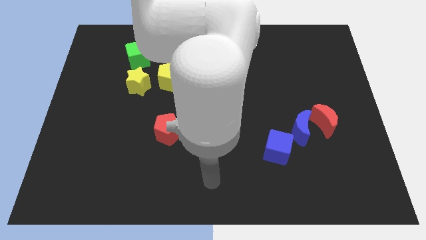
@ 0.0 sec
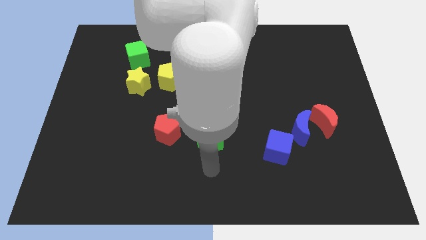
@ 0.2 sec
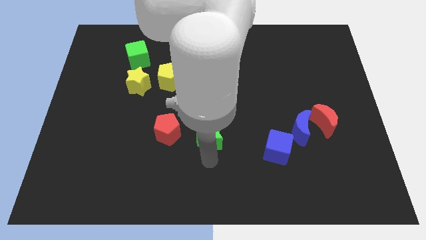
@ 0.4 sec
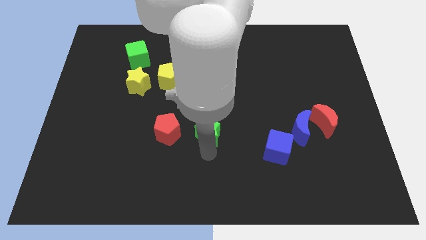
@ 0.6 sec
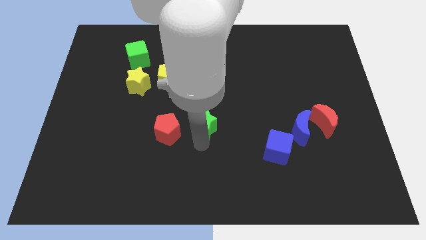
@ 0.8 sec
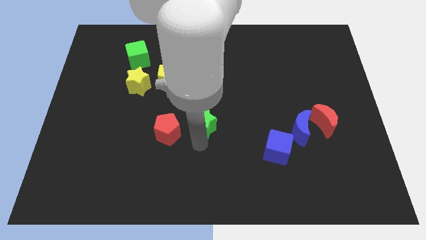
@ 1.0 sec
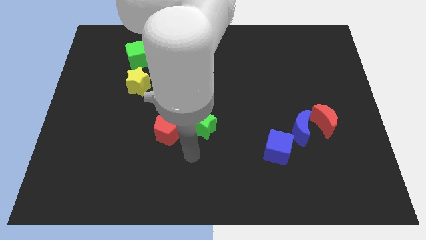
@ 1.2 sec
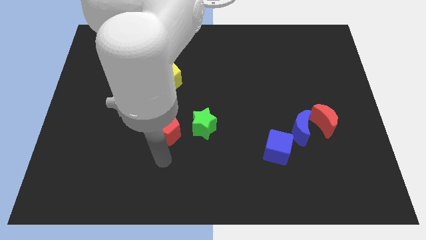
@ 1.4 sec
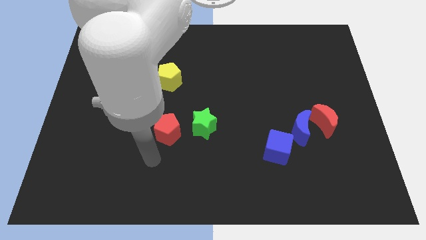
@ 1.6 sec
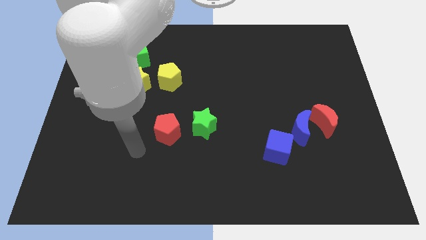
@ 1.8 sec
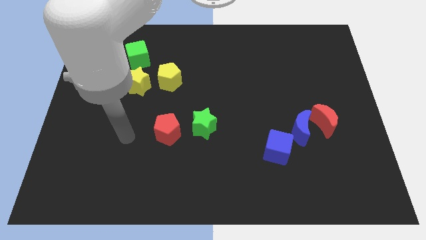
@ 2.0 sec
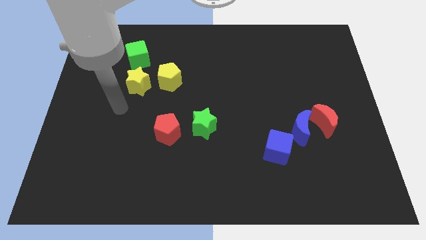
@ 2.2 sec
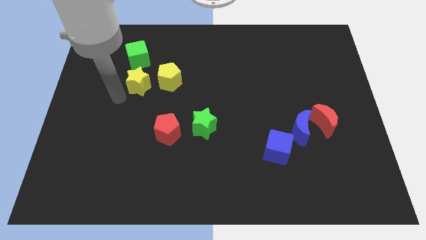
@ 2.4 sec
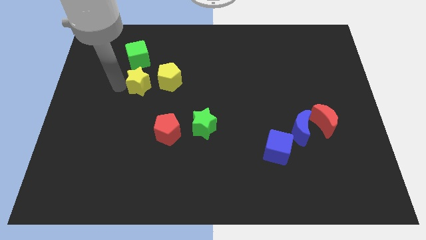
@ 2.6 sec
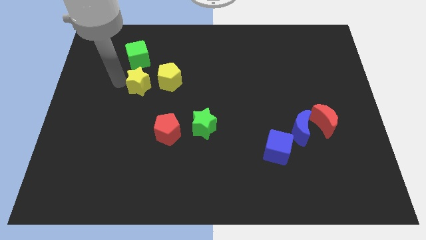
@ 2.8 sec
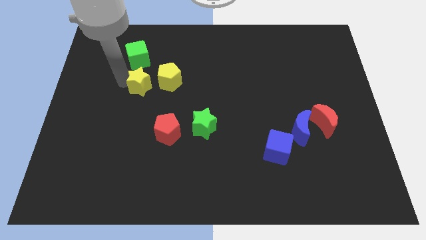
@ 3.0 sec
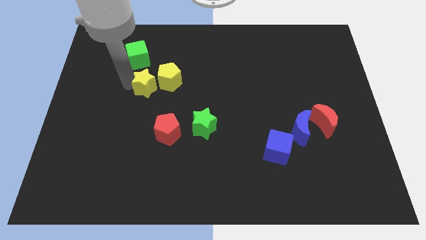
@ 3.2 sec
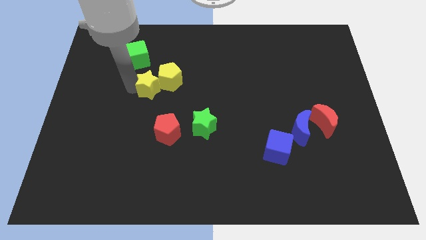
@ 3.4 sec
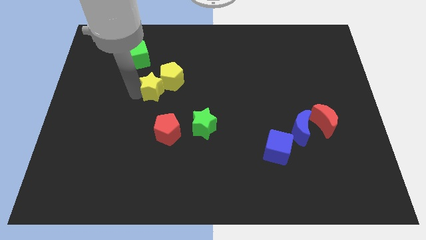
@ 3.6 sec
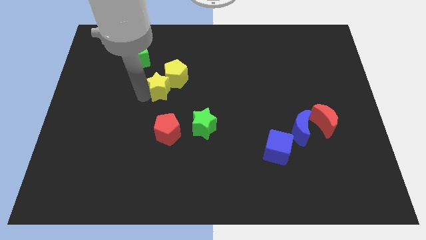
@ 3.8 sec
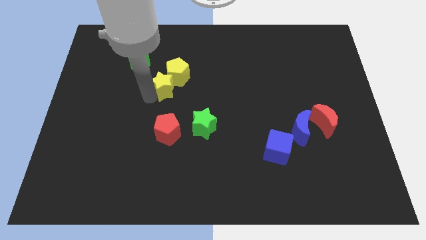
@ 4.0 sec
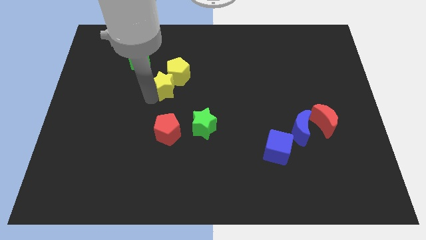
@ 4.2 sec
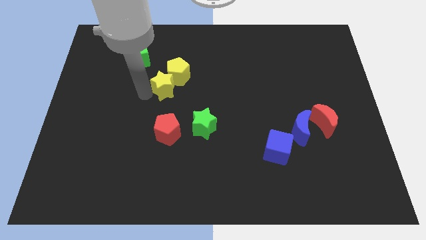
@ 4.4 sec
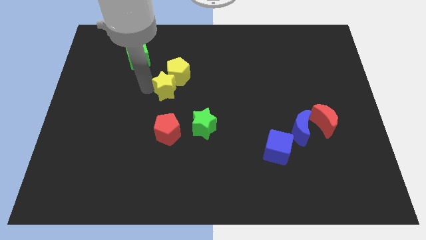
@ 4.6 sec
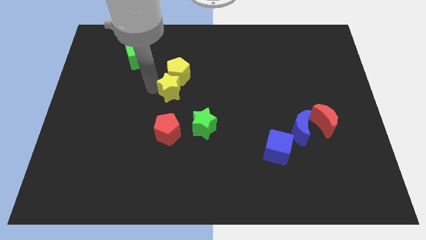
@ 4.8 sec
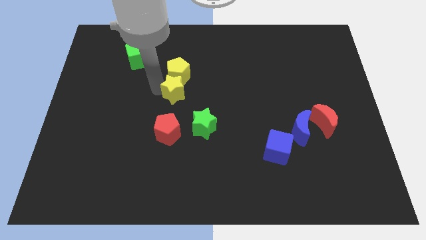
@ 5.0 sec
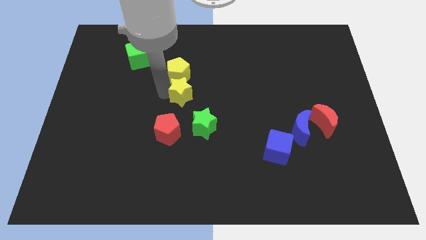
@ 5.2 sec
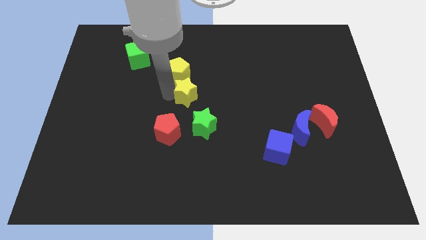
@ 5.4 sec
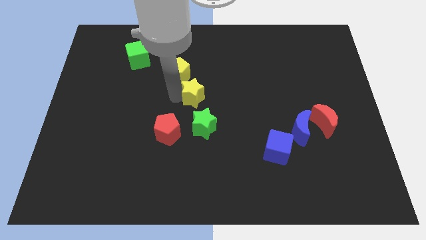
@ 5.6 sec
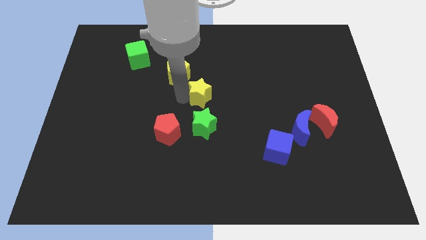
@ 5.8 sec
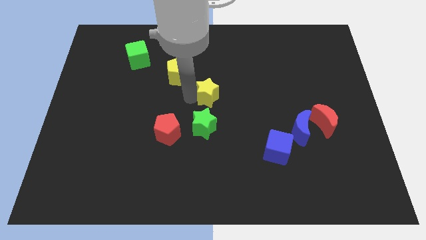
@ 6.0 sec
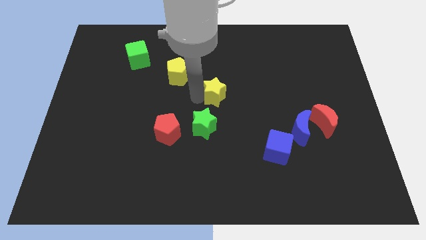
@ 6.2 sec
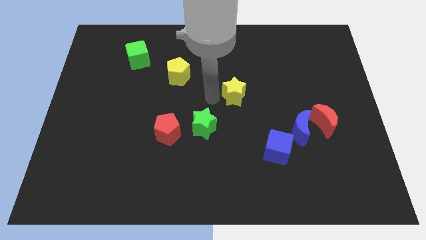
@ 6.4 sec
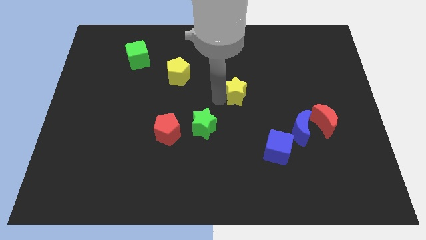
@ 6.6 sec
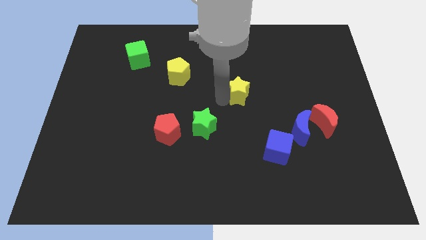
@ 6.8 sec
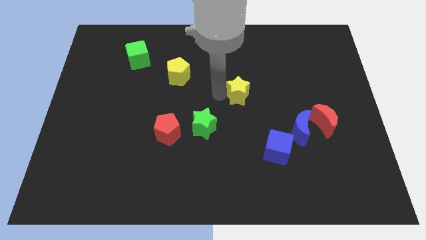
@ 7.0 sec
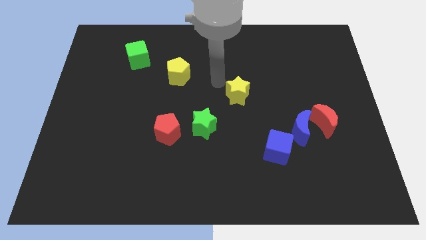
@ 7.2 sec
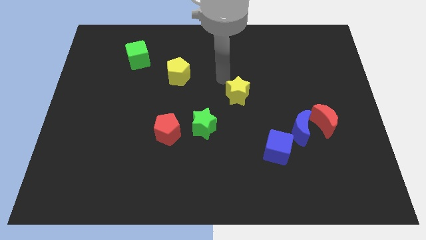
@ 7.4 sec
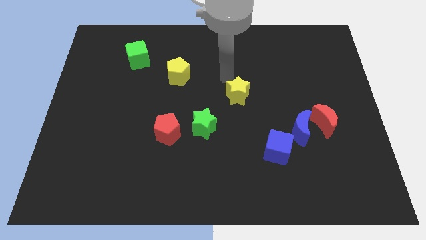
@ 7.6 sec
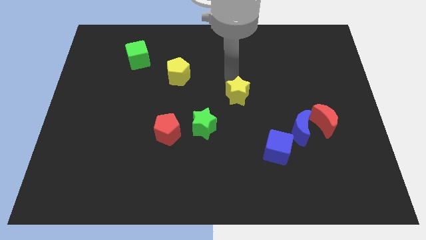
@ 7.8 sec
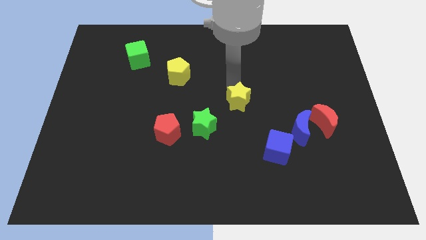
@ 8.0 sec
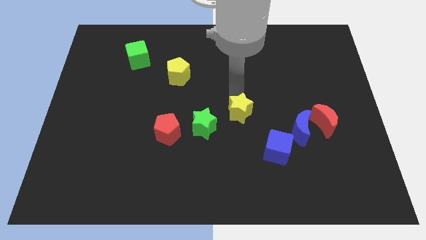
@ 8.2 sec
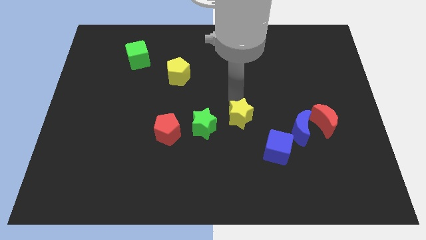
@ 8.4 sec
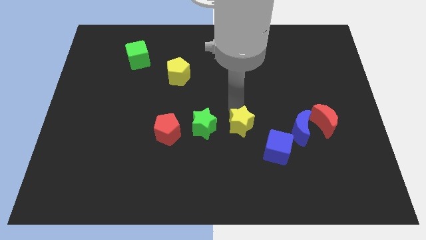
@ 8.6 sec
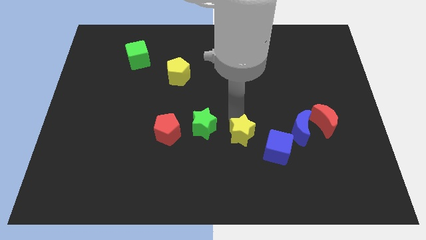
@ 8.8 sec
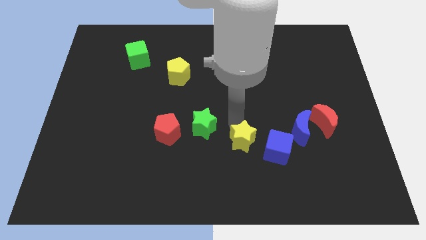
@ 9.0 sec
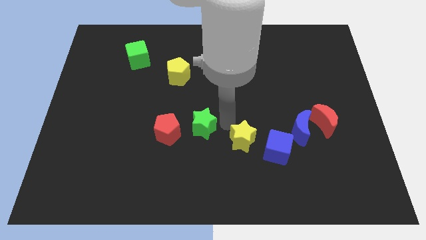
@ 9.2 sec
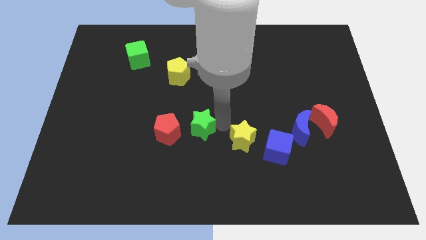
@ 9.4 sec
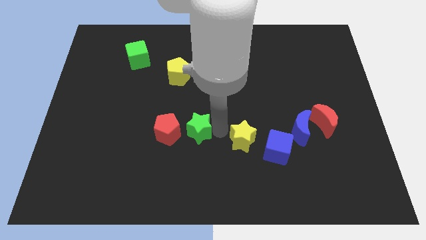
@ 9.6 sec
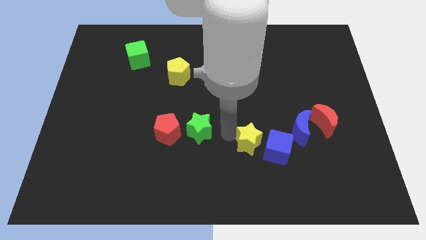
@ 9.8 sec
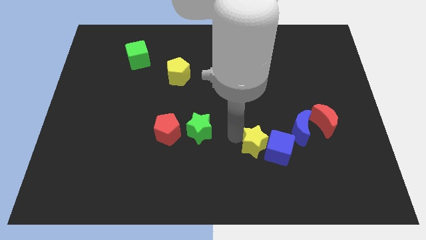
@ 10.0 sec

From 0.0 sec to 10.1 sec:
move the yellow star close to the blue cube

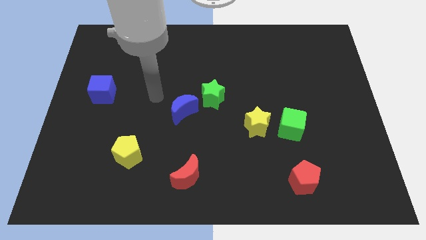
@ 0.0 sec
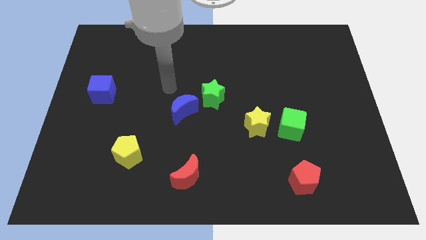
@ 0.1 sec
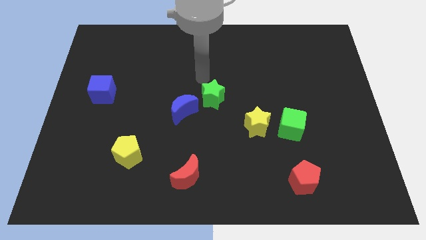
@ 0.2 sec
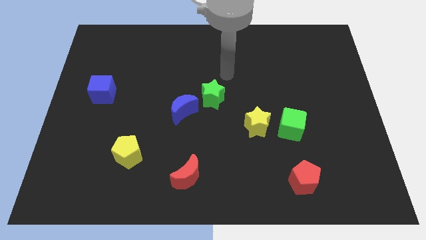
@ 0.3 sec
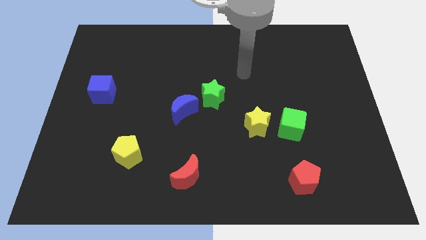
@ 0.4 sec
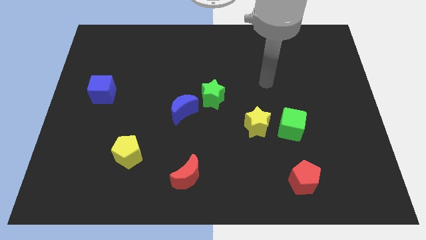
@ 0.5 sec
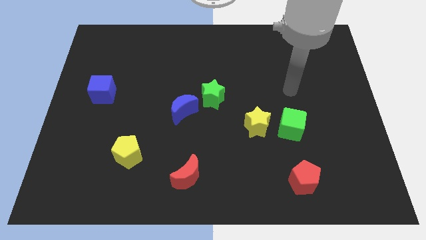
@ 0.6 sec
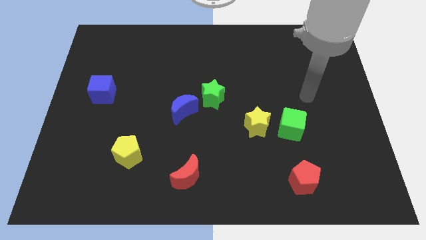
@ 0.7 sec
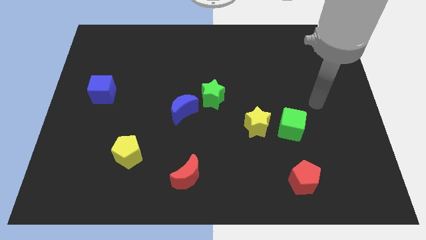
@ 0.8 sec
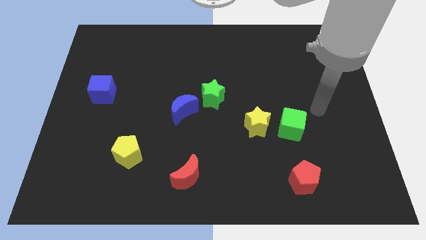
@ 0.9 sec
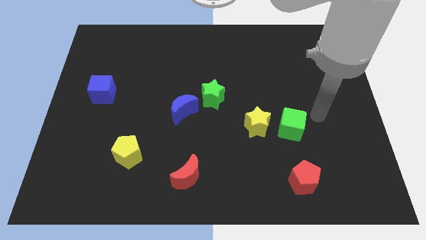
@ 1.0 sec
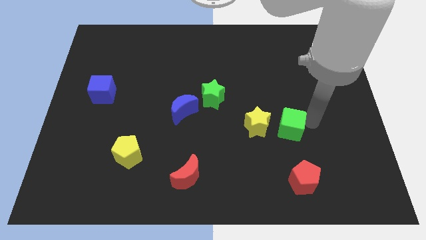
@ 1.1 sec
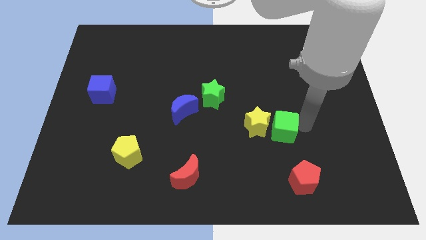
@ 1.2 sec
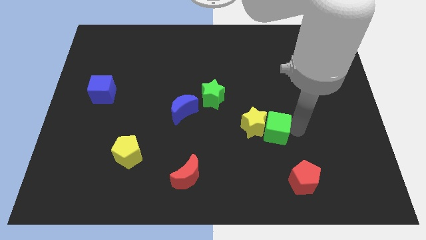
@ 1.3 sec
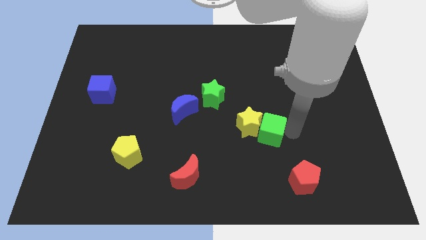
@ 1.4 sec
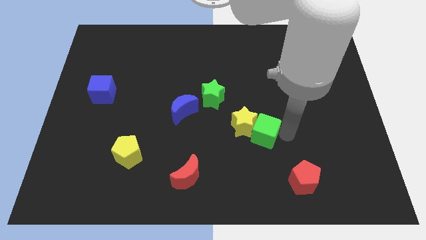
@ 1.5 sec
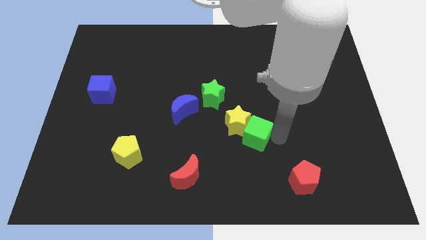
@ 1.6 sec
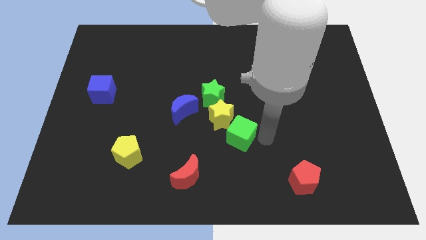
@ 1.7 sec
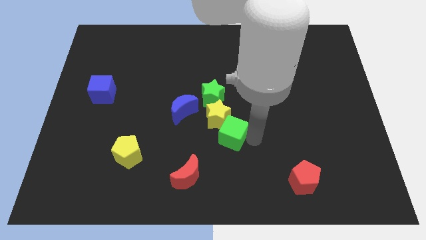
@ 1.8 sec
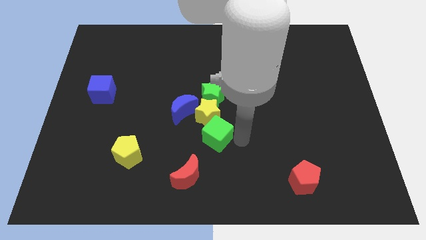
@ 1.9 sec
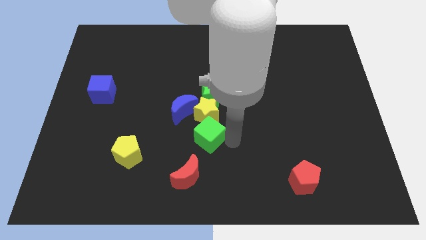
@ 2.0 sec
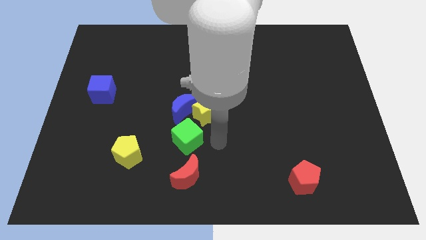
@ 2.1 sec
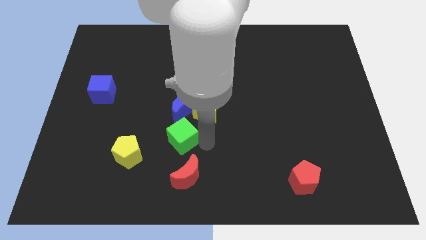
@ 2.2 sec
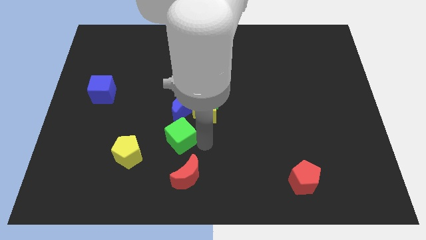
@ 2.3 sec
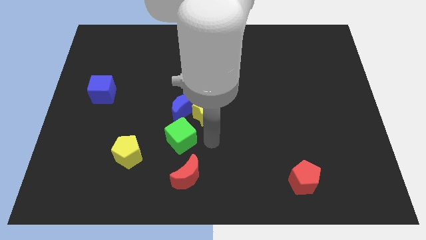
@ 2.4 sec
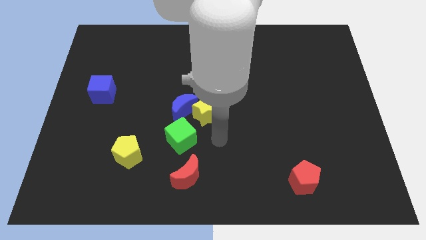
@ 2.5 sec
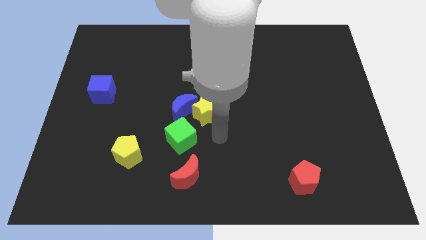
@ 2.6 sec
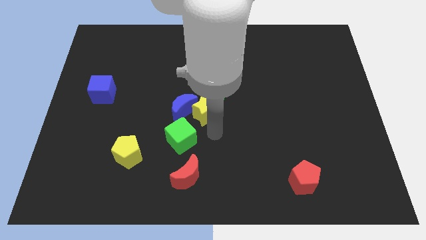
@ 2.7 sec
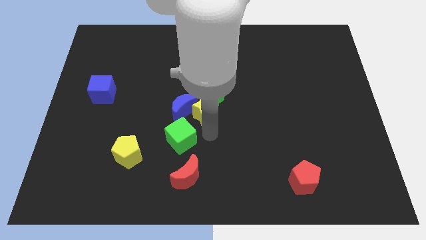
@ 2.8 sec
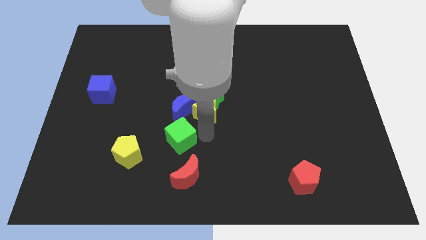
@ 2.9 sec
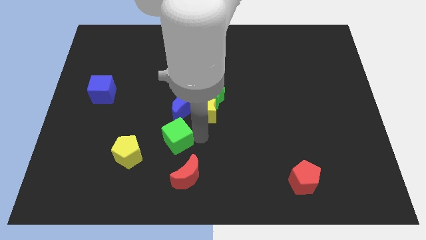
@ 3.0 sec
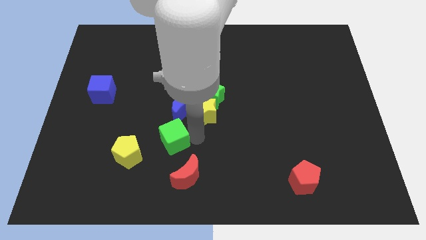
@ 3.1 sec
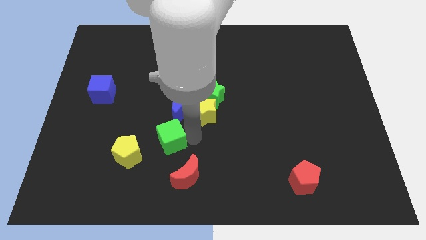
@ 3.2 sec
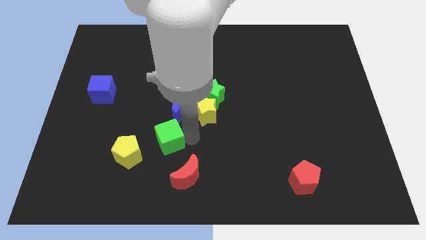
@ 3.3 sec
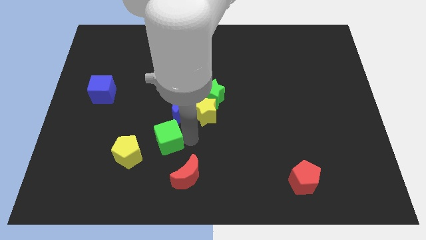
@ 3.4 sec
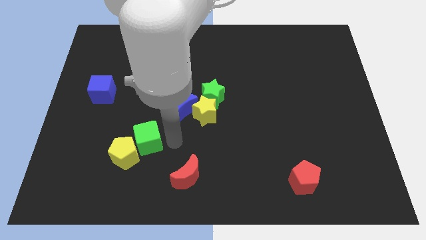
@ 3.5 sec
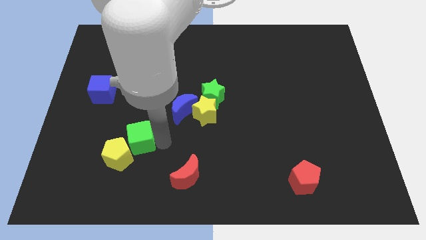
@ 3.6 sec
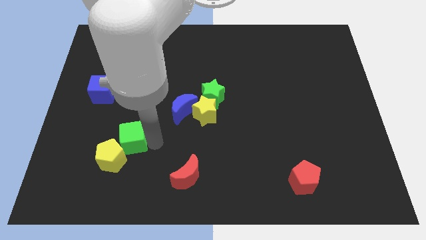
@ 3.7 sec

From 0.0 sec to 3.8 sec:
slide the green cube next to the yellow pentagon
